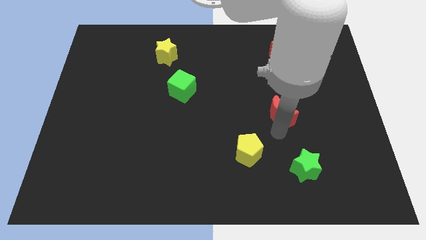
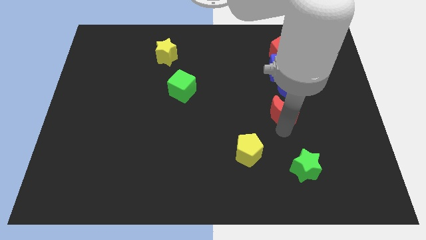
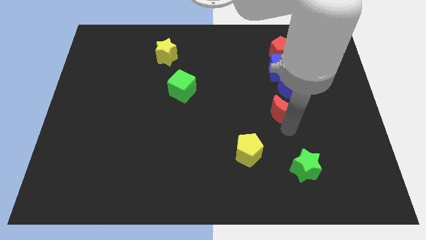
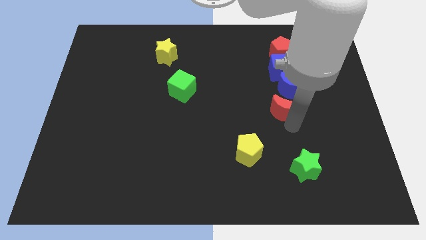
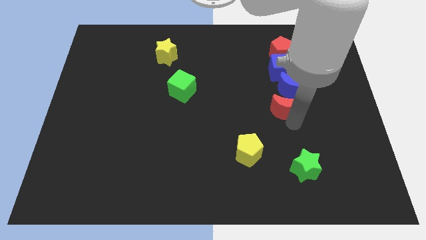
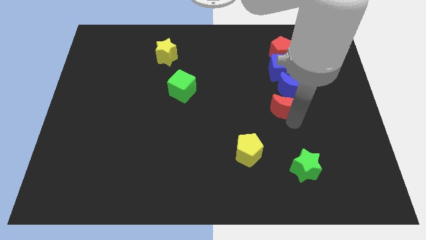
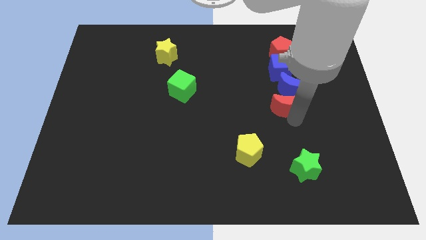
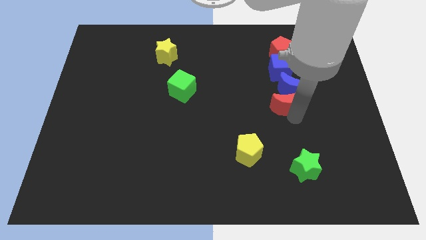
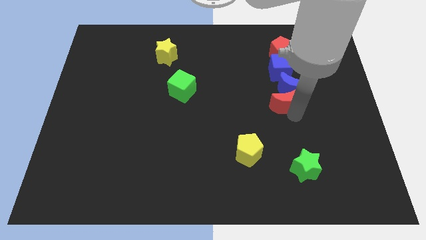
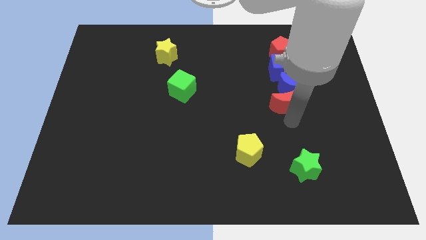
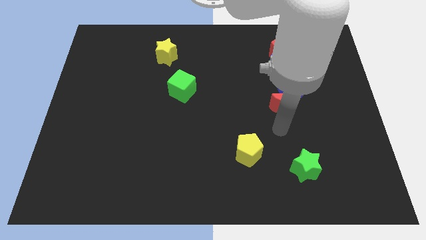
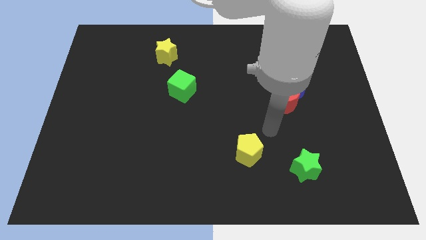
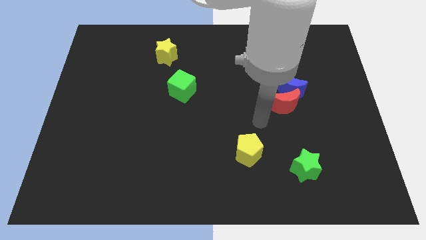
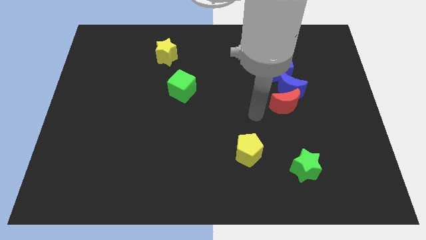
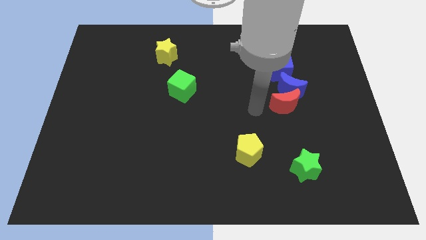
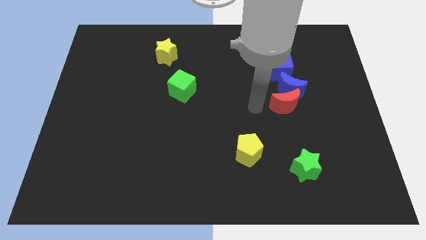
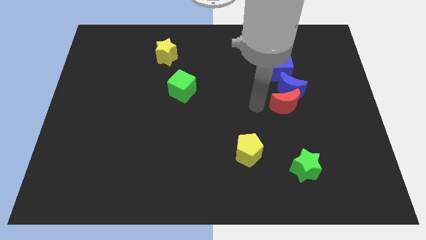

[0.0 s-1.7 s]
move the red crescent below the blue crescent

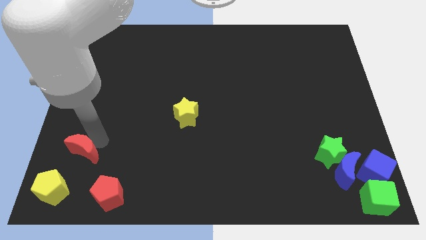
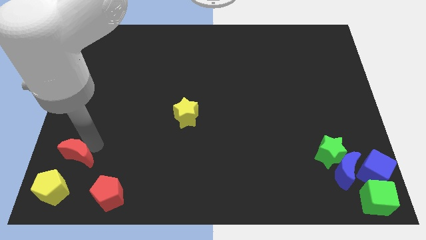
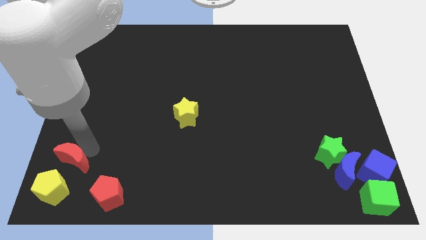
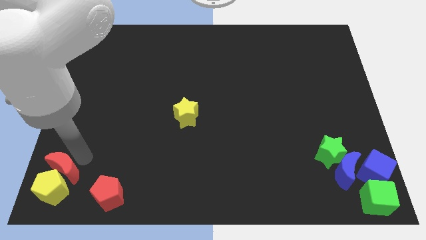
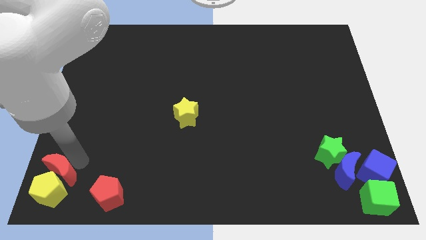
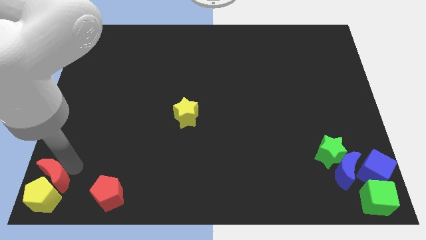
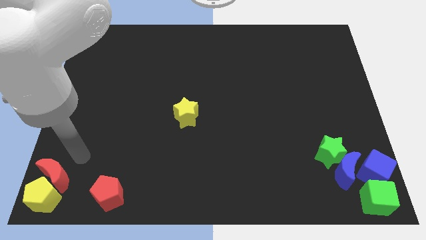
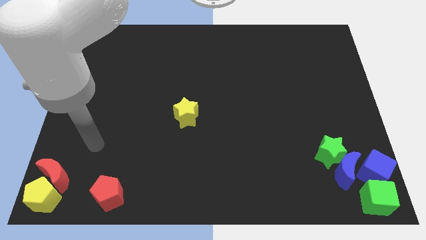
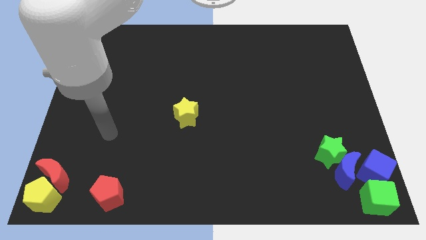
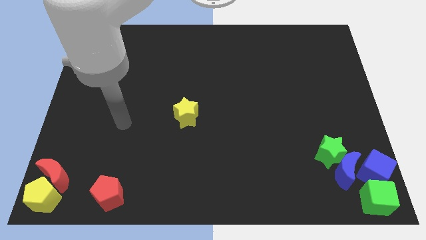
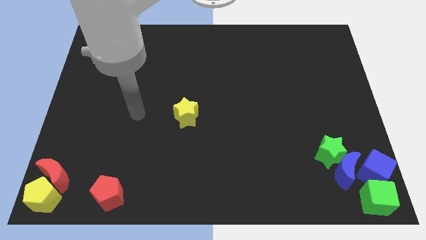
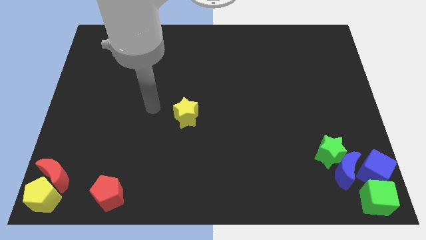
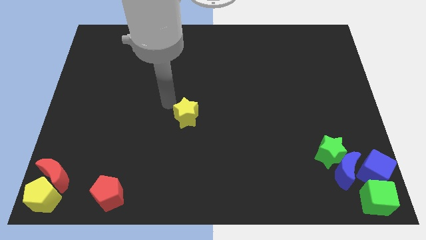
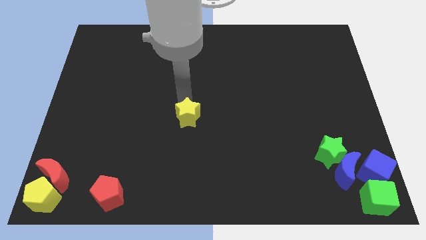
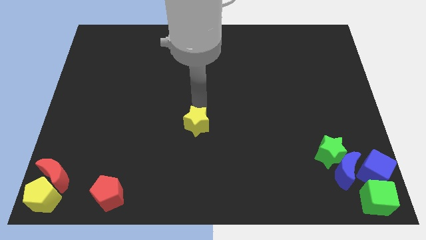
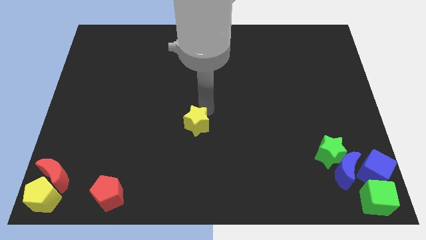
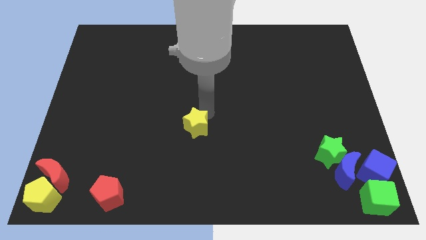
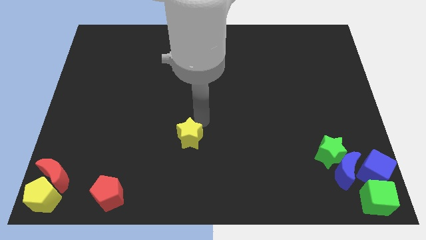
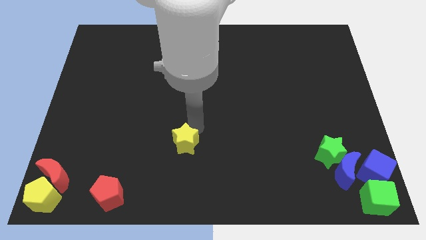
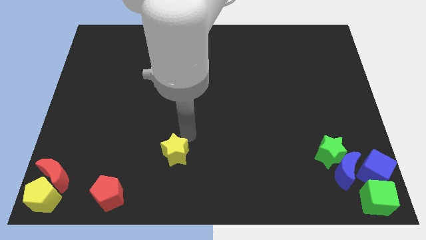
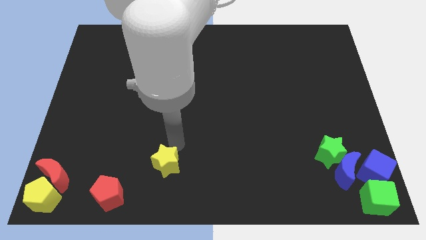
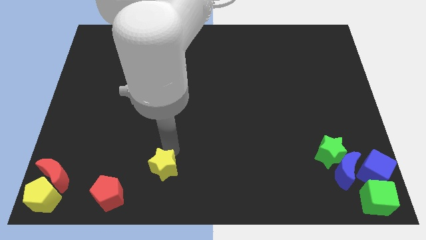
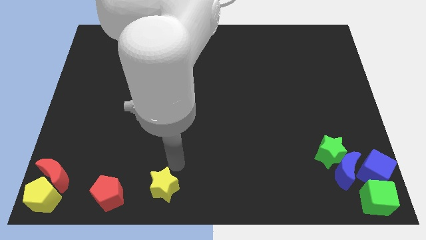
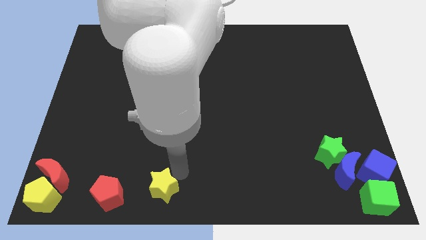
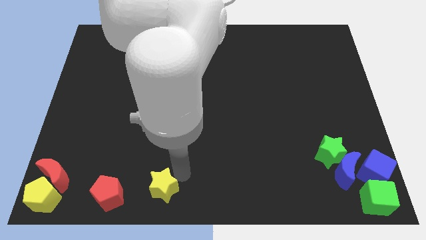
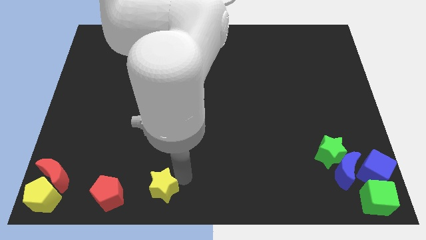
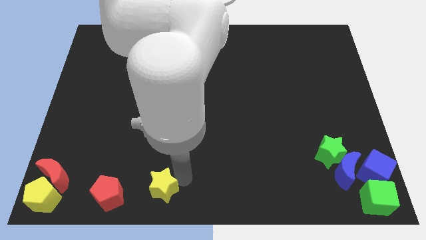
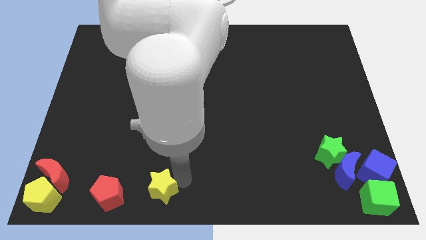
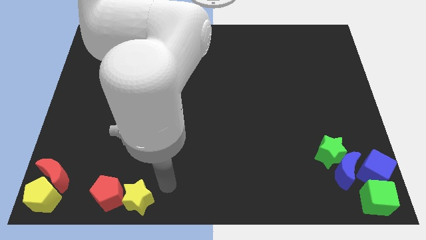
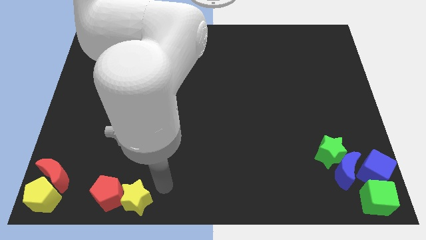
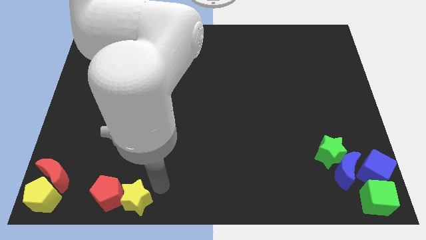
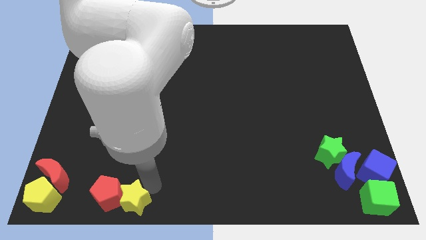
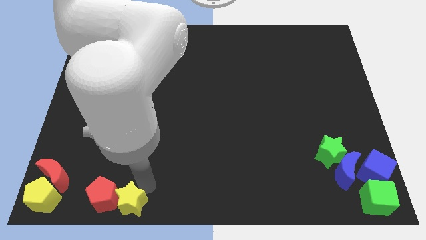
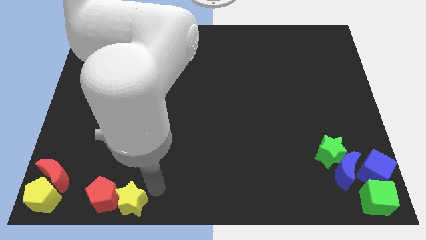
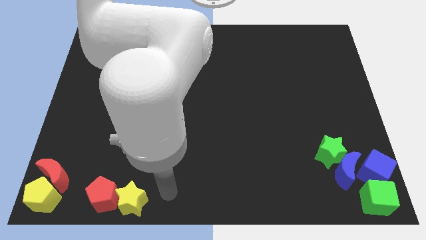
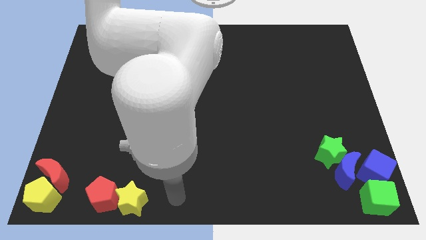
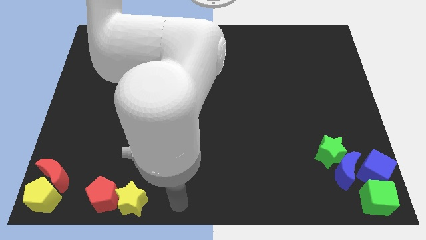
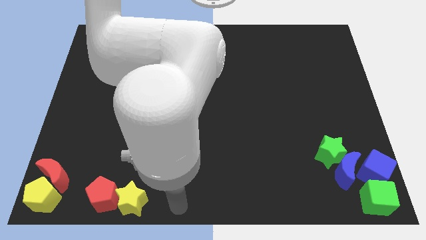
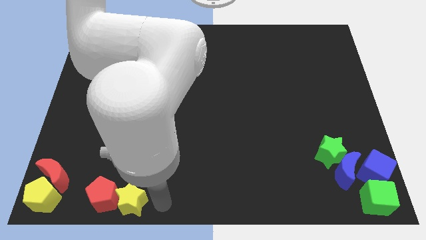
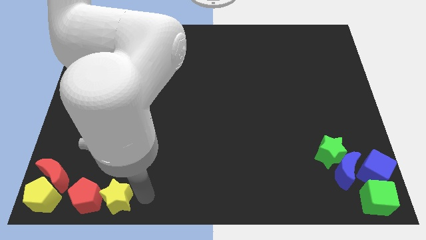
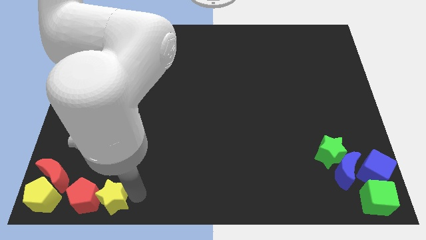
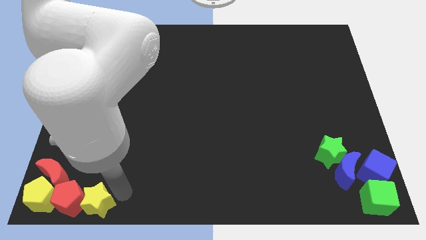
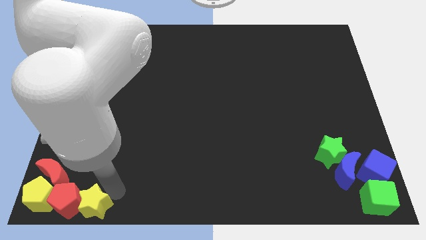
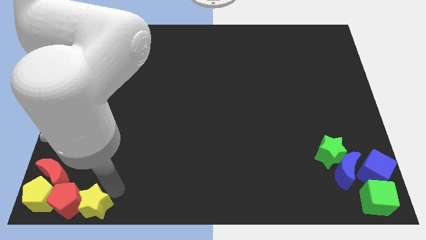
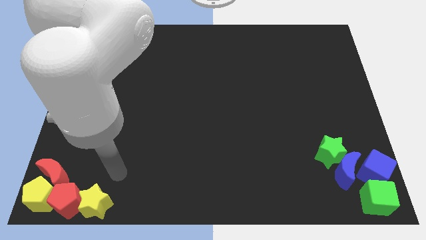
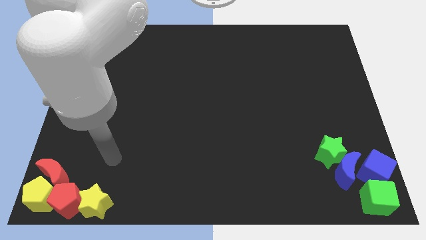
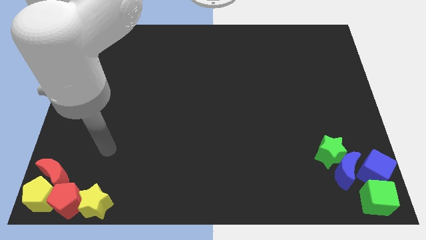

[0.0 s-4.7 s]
put the red blocks and the yellow blocks at the bottom left corner

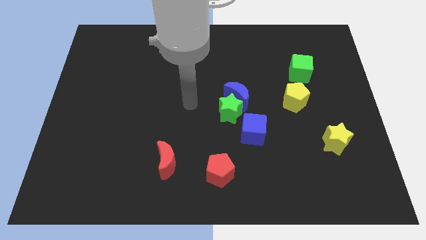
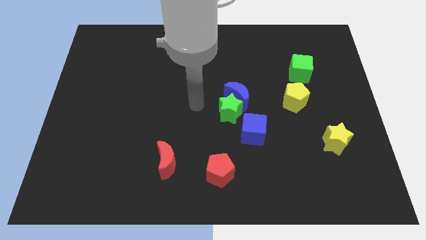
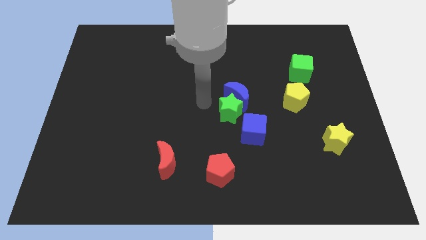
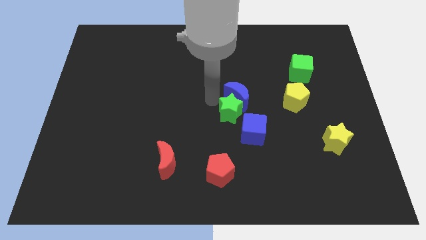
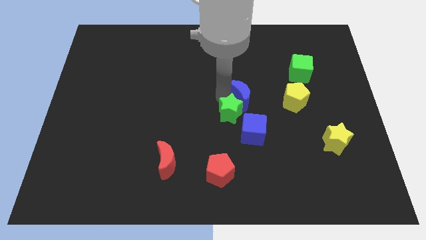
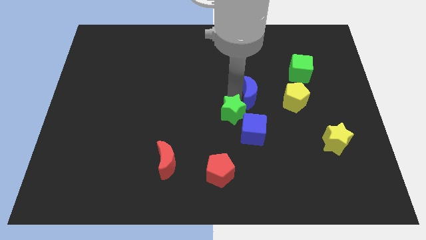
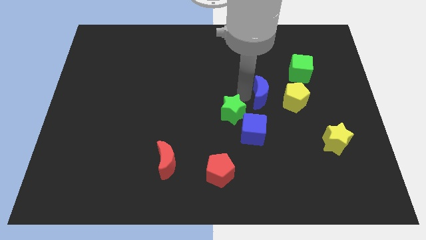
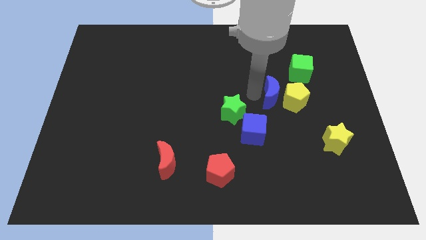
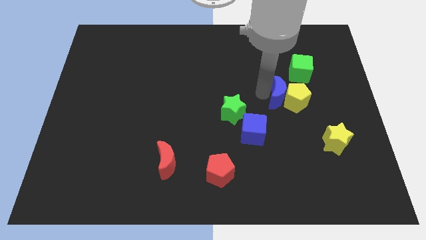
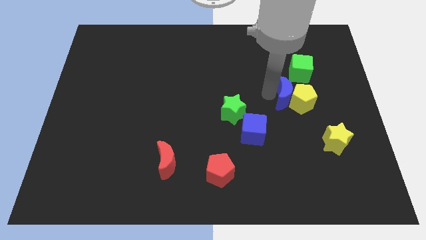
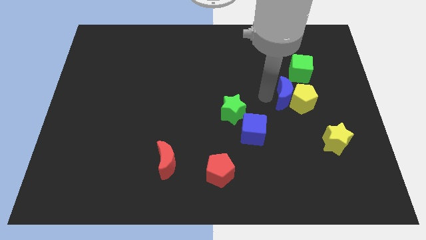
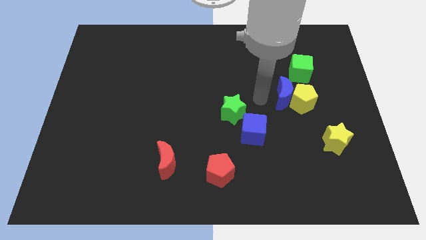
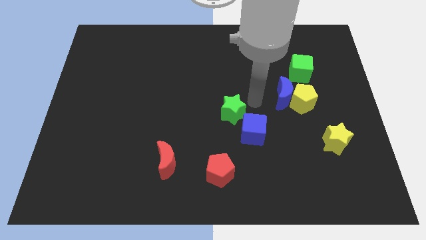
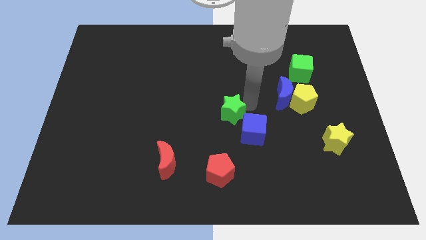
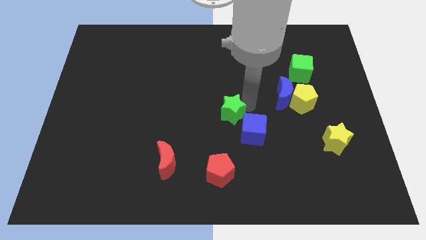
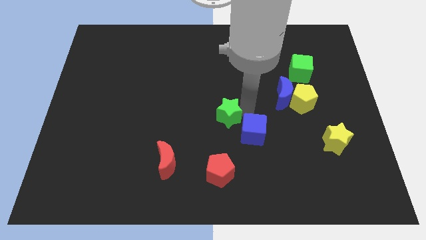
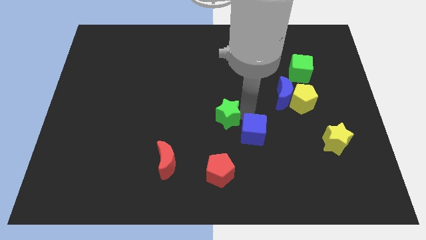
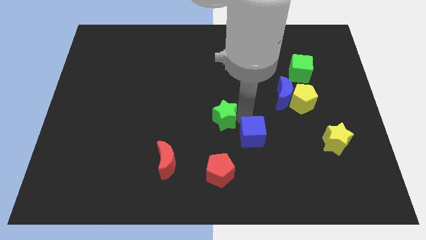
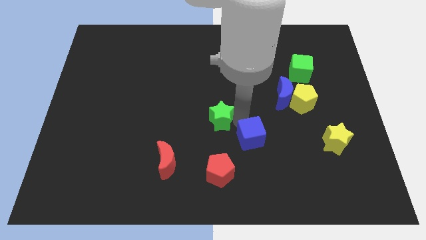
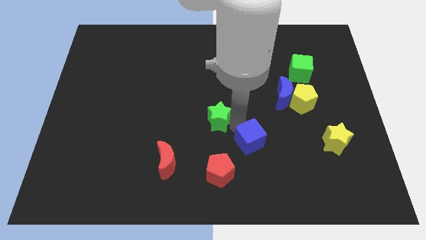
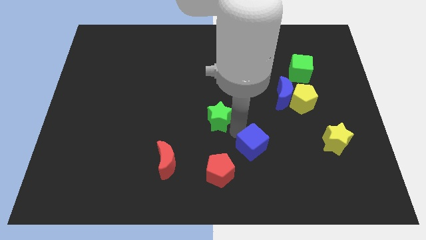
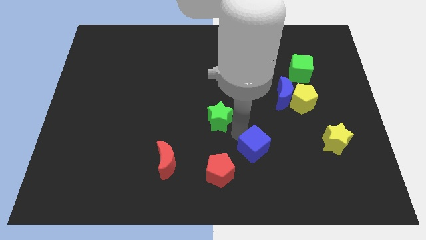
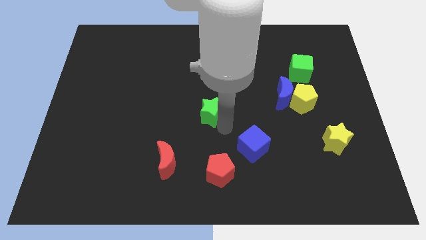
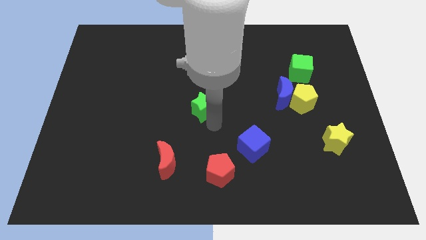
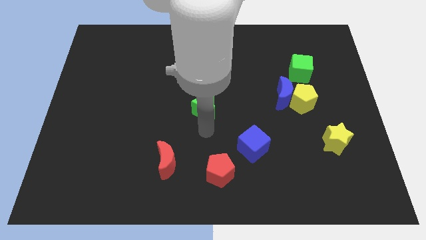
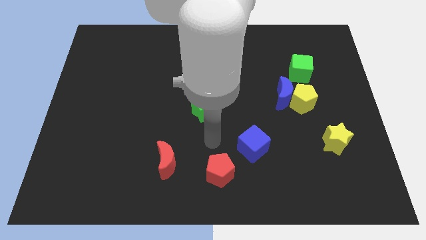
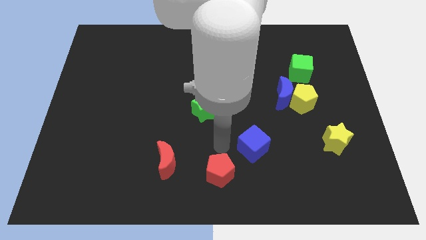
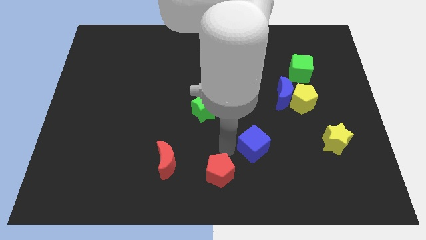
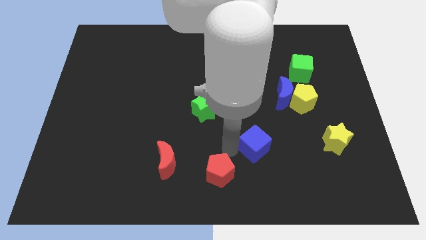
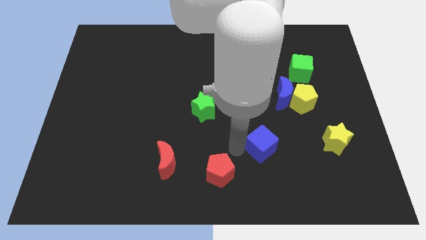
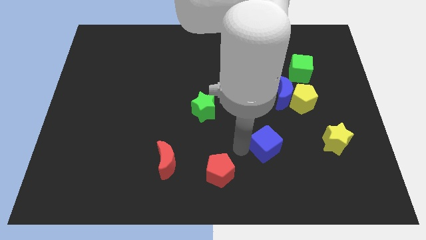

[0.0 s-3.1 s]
separate green star and blue cube
